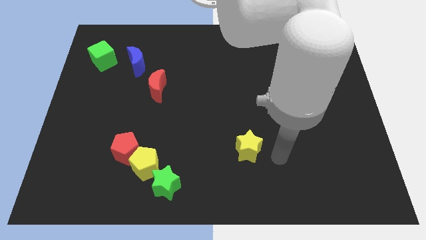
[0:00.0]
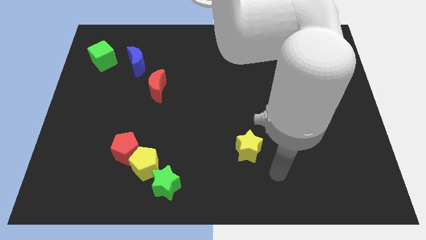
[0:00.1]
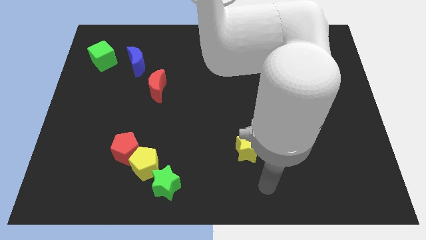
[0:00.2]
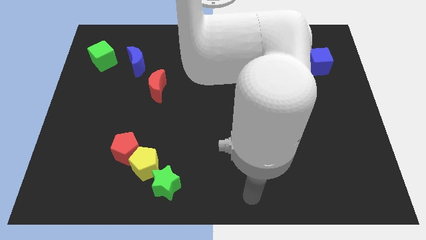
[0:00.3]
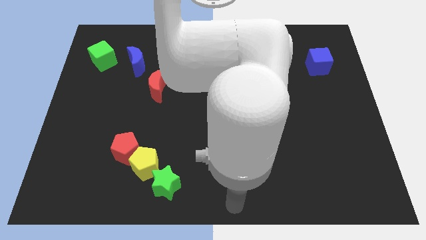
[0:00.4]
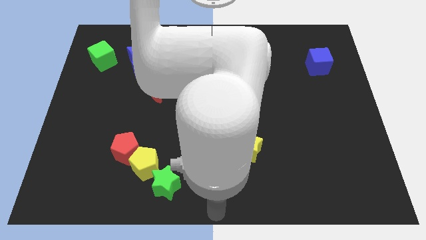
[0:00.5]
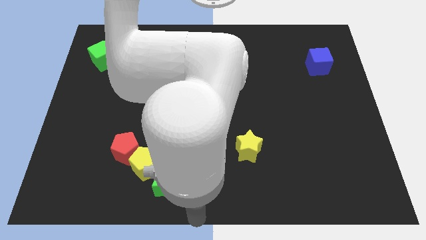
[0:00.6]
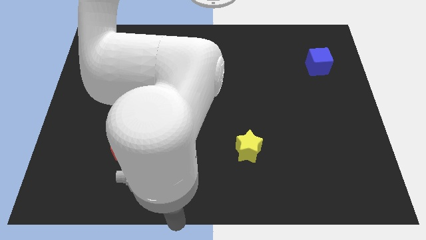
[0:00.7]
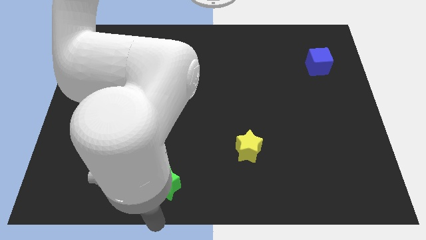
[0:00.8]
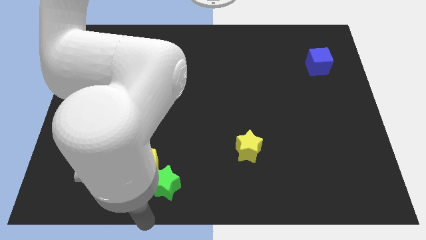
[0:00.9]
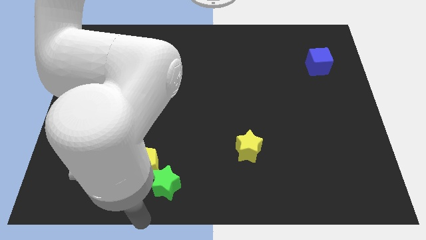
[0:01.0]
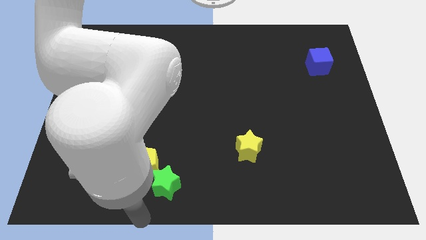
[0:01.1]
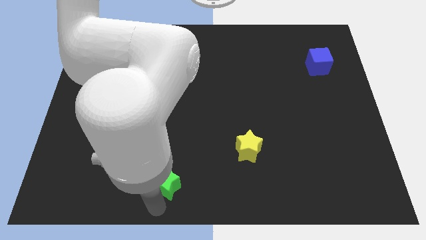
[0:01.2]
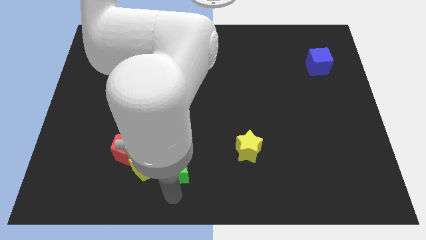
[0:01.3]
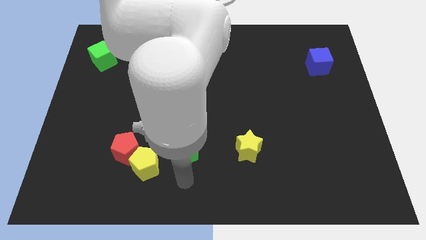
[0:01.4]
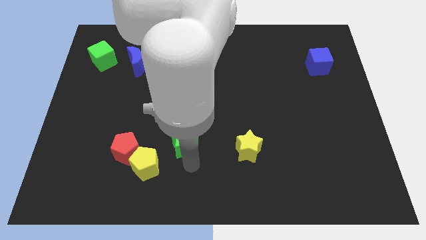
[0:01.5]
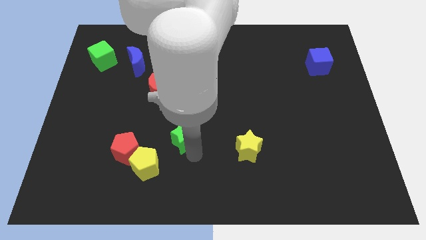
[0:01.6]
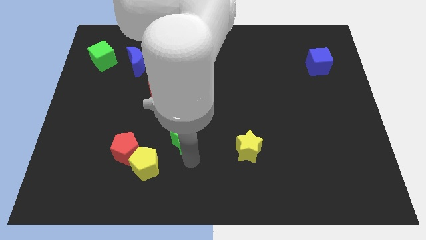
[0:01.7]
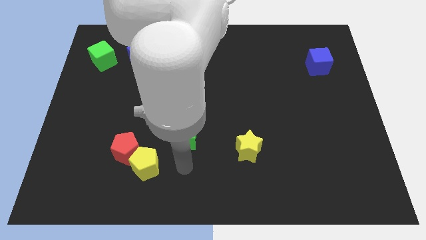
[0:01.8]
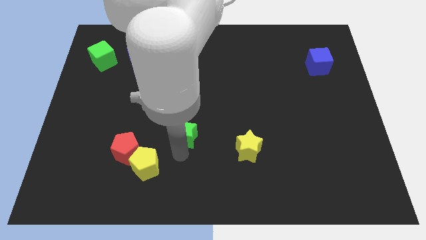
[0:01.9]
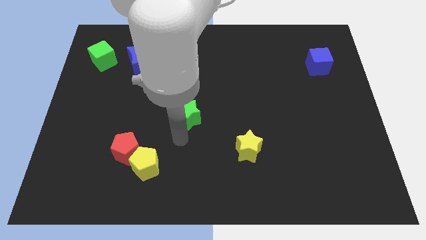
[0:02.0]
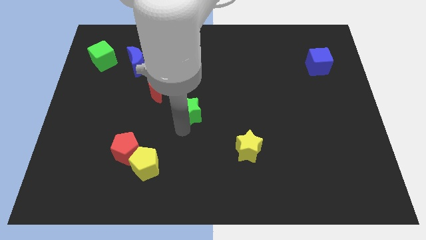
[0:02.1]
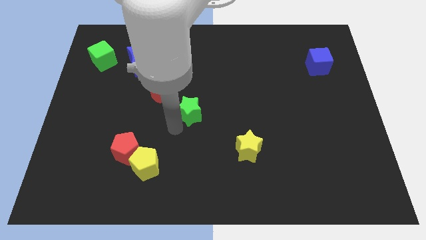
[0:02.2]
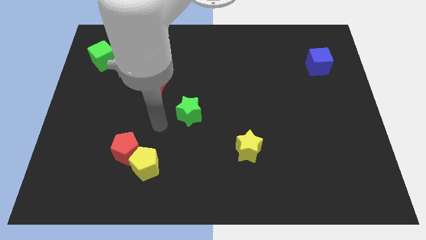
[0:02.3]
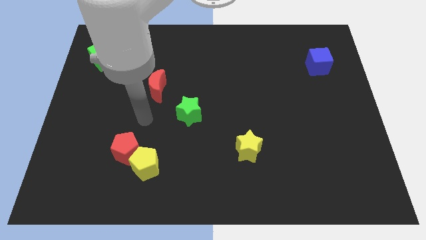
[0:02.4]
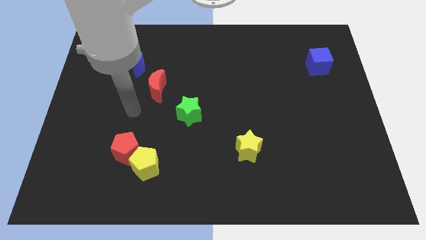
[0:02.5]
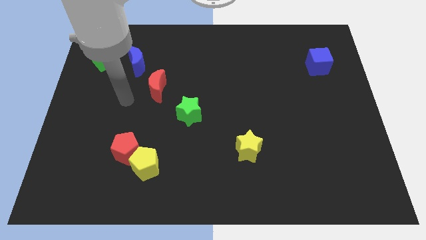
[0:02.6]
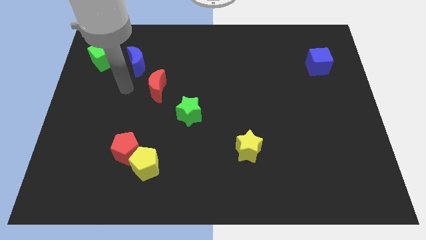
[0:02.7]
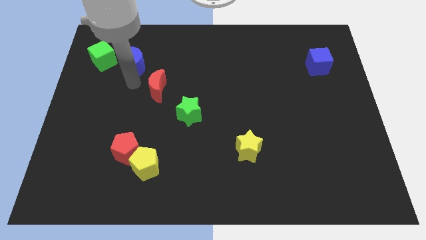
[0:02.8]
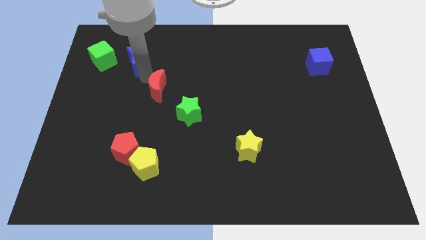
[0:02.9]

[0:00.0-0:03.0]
separate the green star from yellow pentagon

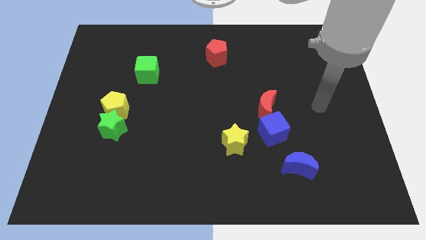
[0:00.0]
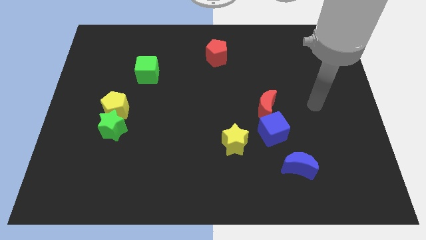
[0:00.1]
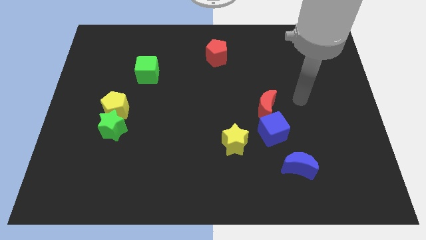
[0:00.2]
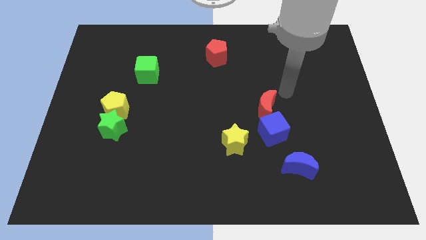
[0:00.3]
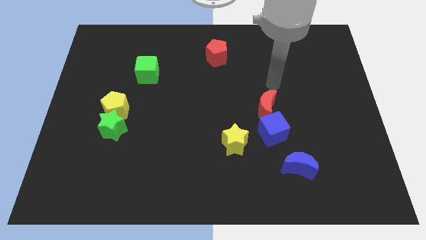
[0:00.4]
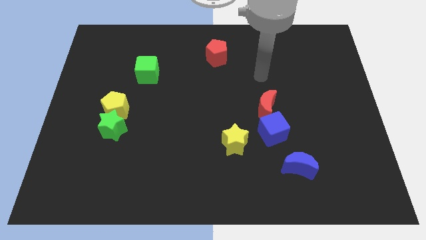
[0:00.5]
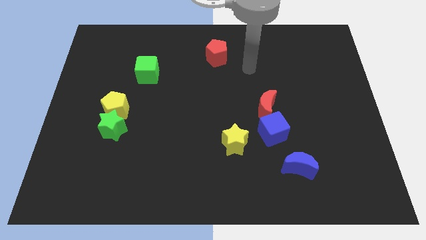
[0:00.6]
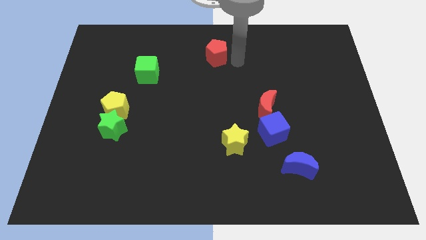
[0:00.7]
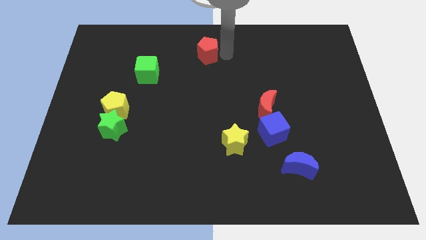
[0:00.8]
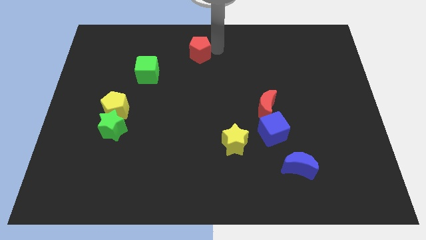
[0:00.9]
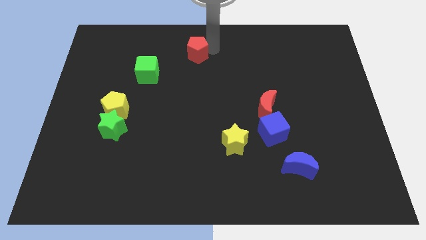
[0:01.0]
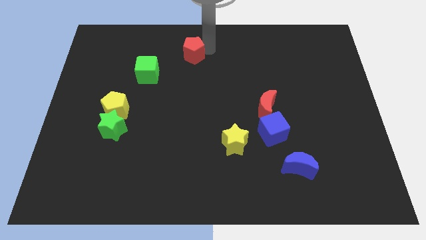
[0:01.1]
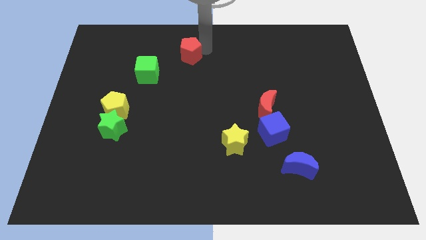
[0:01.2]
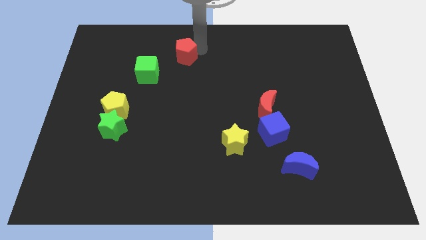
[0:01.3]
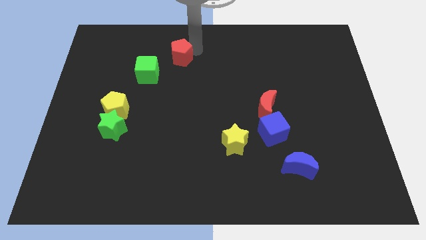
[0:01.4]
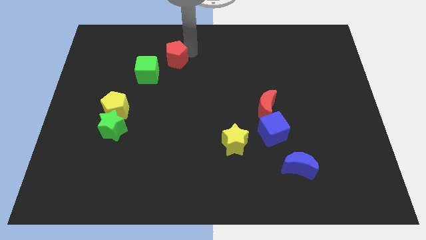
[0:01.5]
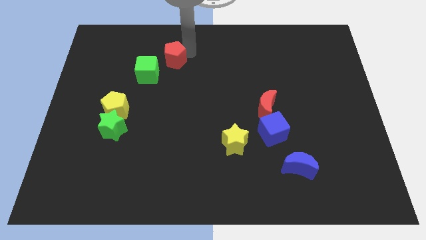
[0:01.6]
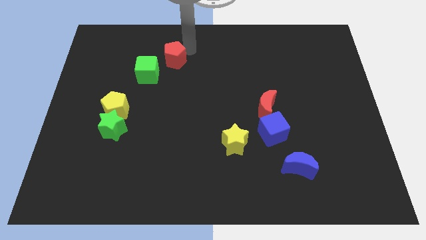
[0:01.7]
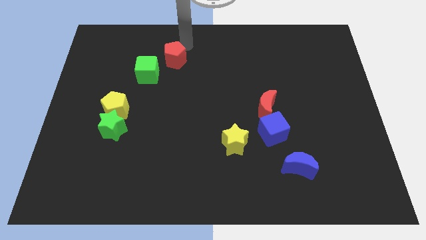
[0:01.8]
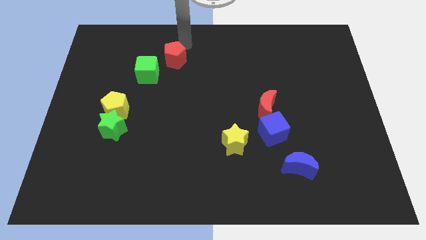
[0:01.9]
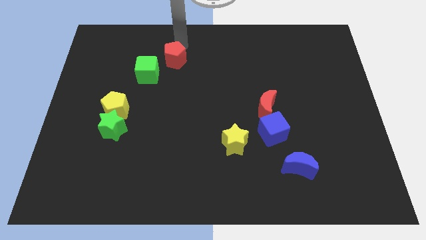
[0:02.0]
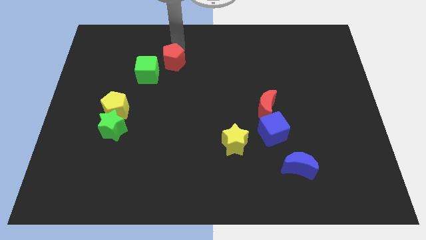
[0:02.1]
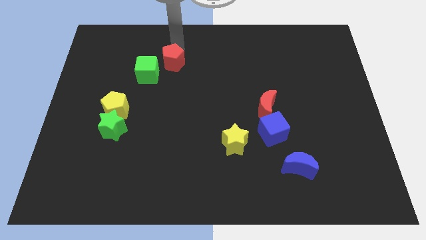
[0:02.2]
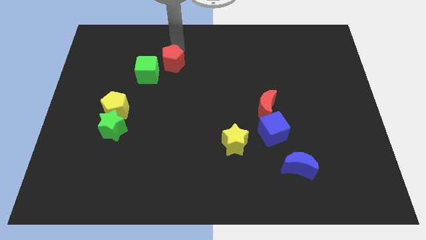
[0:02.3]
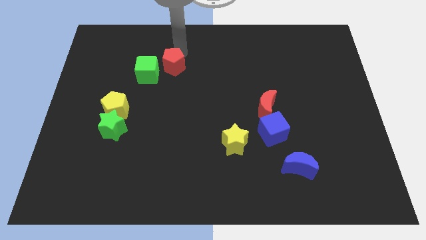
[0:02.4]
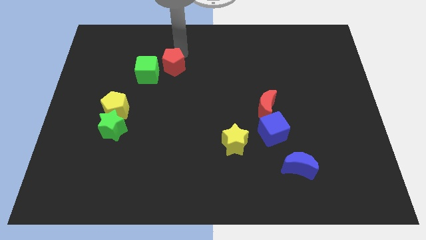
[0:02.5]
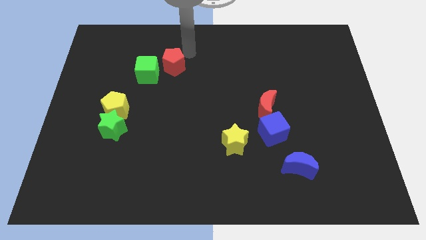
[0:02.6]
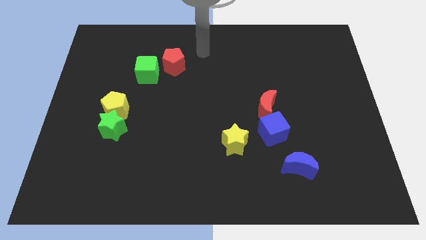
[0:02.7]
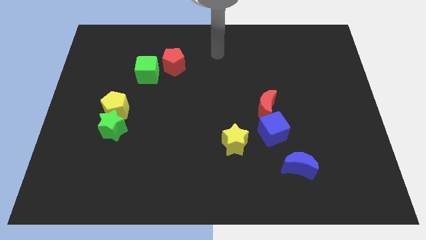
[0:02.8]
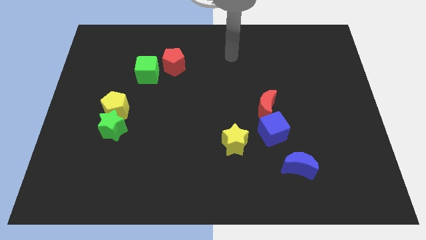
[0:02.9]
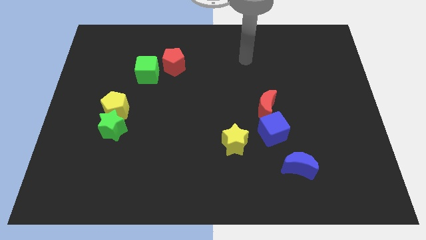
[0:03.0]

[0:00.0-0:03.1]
push the red pentagon to the right of the green cube

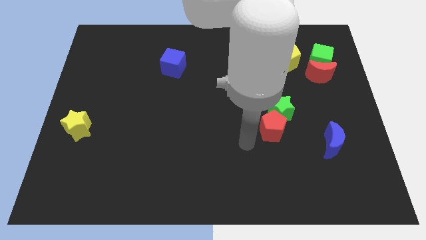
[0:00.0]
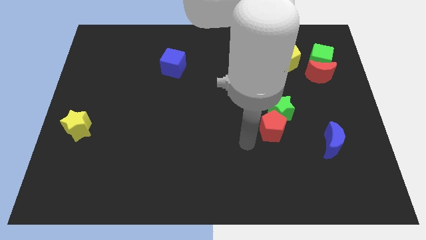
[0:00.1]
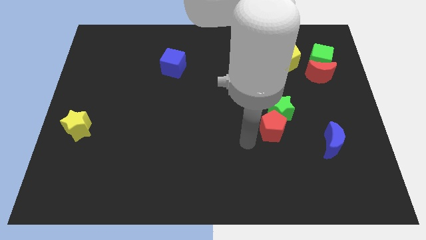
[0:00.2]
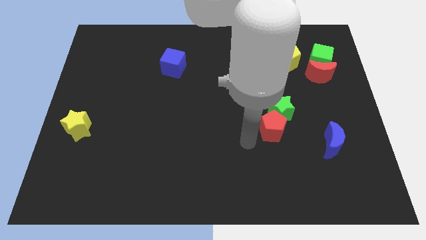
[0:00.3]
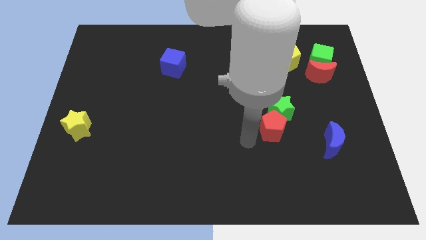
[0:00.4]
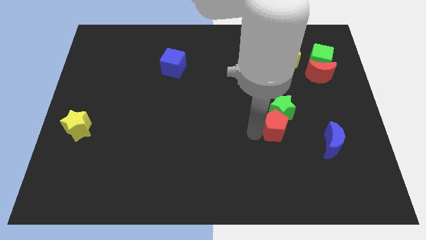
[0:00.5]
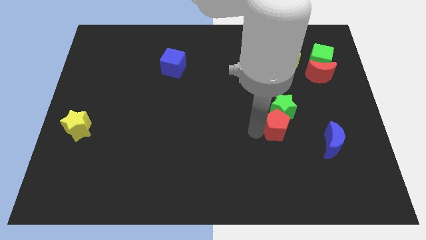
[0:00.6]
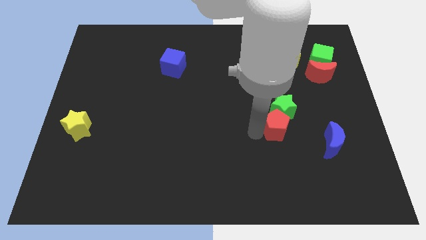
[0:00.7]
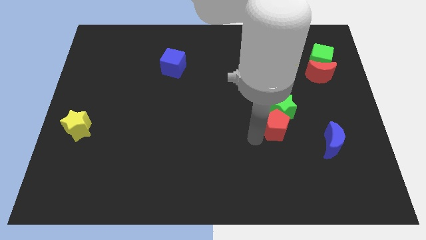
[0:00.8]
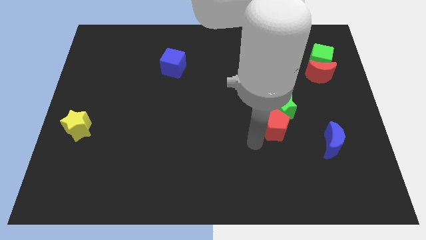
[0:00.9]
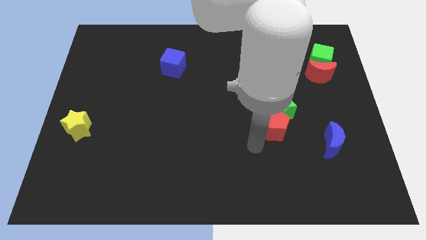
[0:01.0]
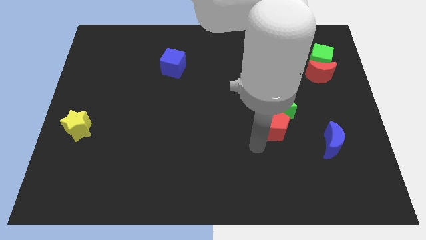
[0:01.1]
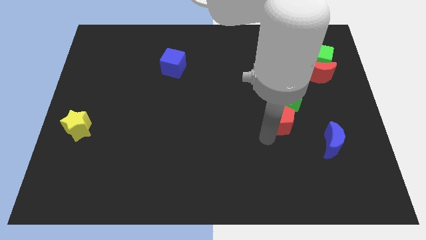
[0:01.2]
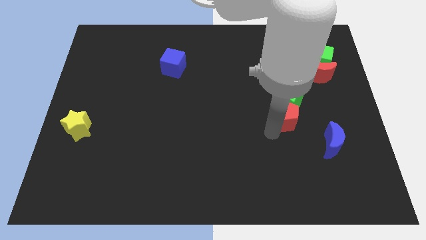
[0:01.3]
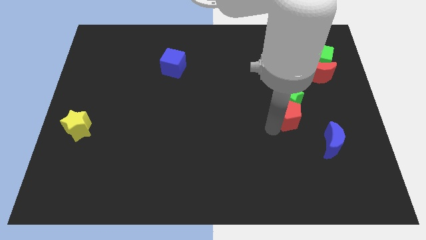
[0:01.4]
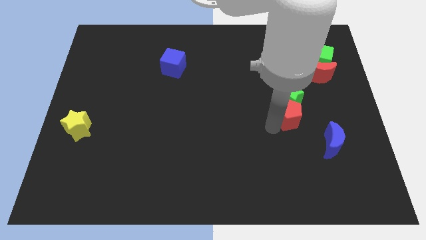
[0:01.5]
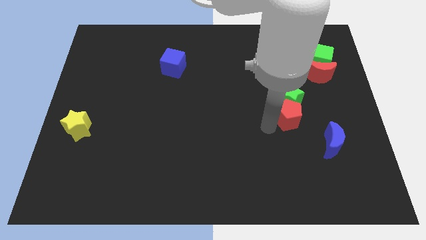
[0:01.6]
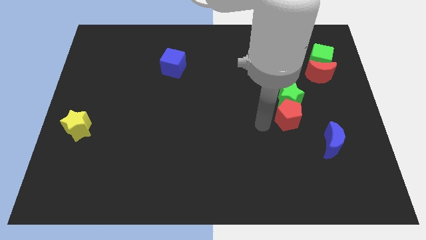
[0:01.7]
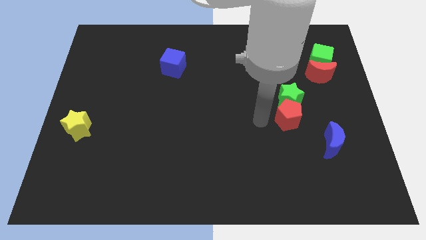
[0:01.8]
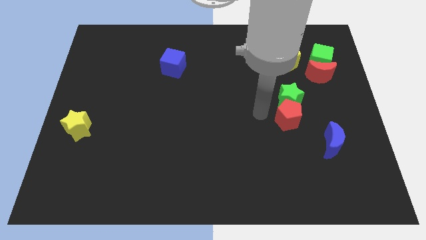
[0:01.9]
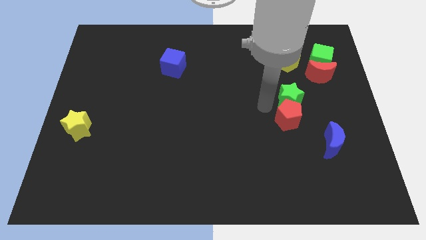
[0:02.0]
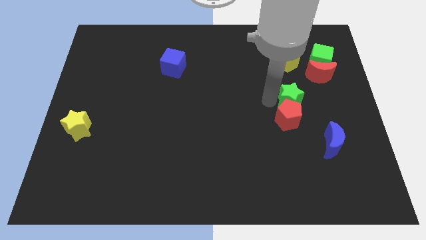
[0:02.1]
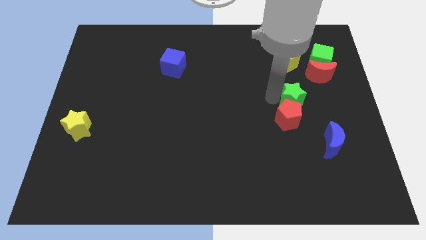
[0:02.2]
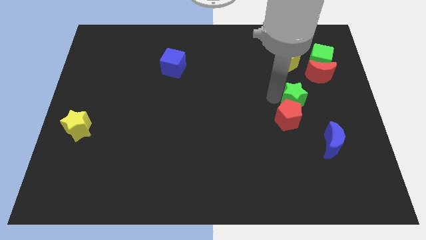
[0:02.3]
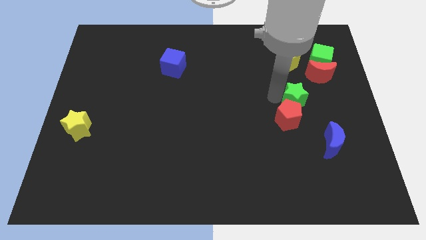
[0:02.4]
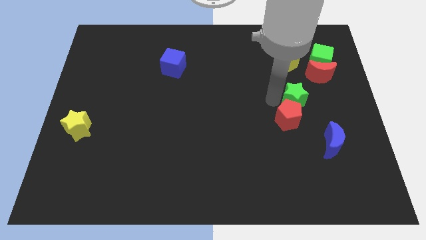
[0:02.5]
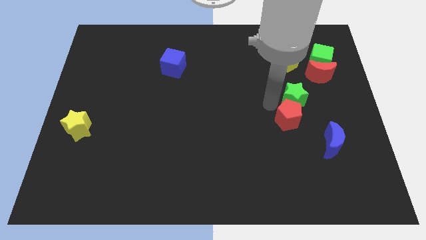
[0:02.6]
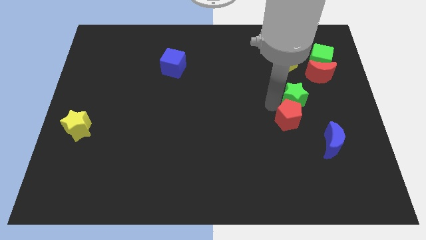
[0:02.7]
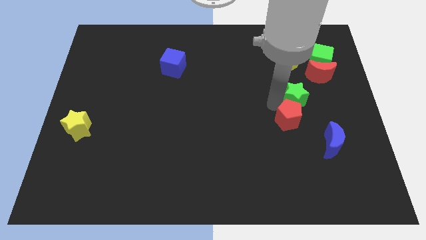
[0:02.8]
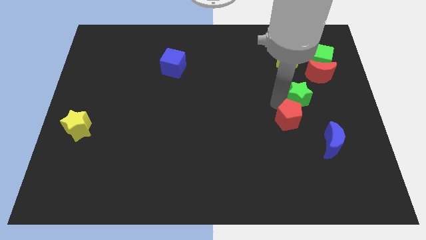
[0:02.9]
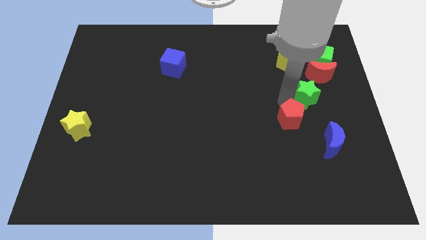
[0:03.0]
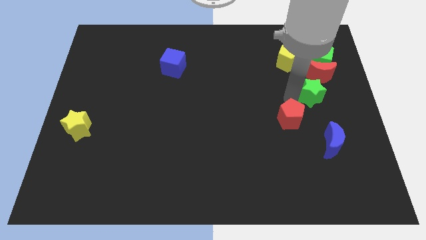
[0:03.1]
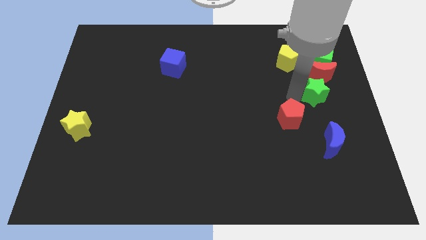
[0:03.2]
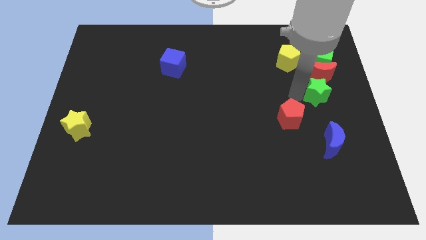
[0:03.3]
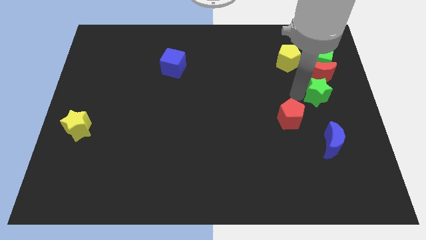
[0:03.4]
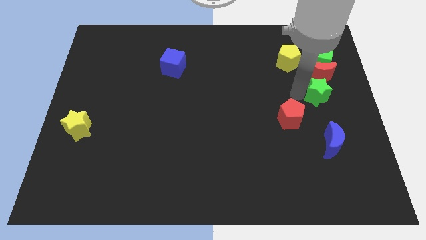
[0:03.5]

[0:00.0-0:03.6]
push green star close to the red moon
